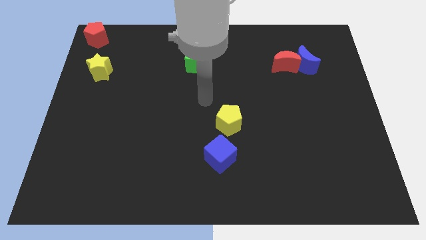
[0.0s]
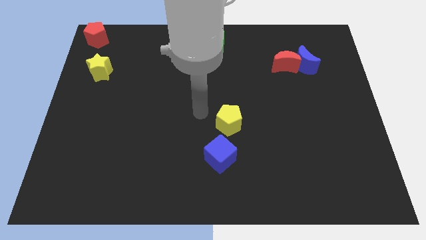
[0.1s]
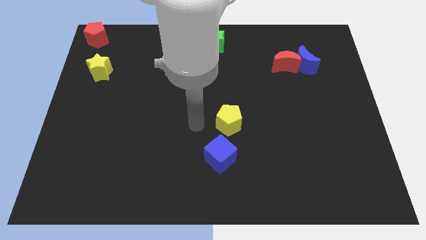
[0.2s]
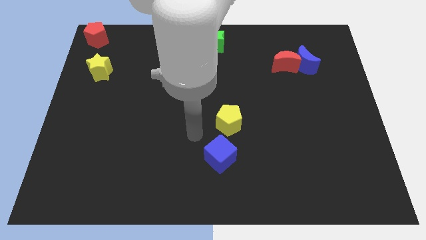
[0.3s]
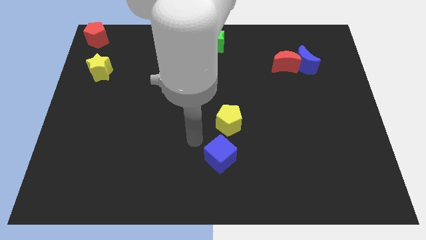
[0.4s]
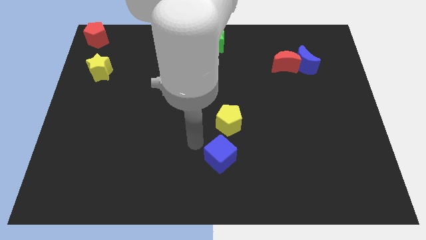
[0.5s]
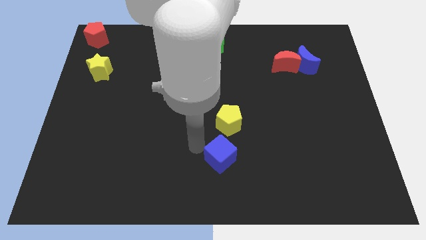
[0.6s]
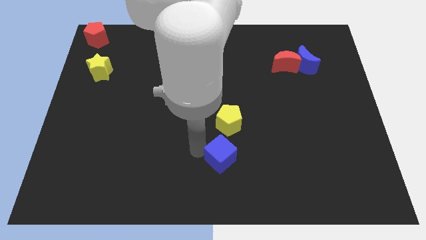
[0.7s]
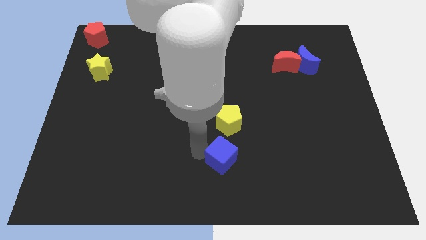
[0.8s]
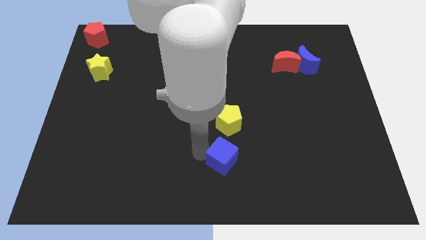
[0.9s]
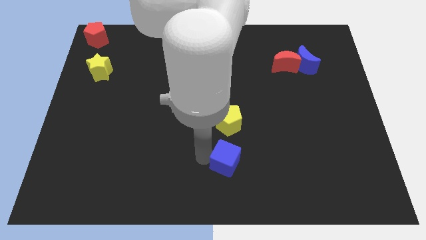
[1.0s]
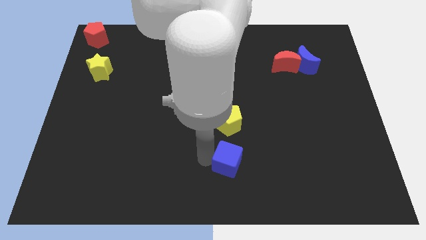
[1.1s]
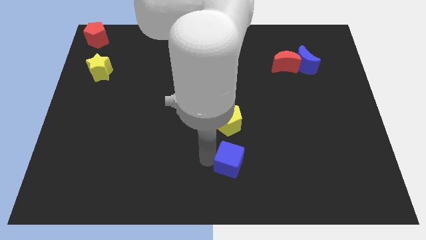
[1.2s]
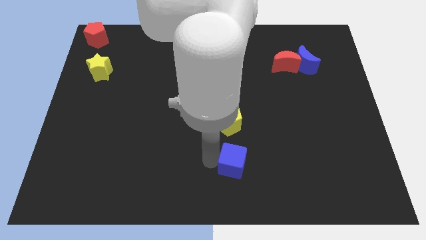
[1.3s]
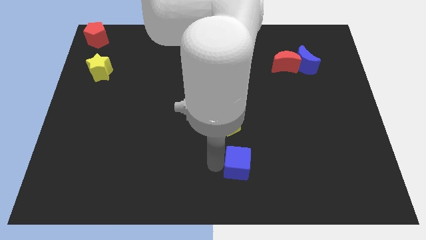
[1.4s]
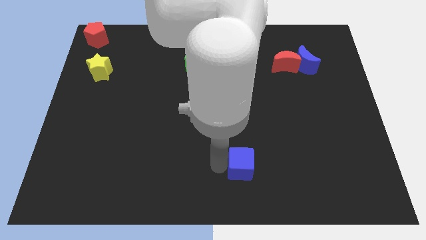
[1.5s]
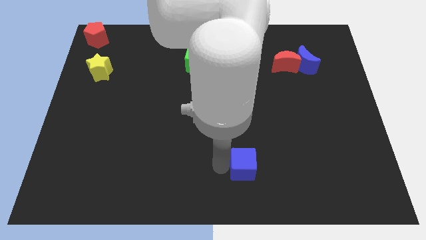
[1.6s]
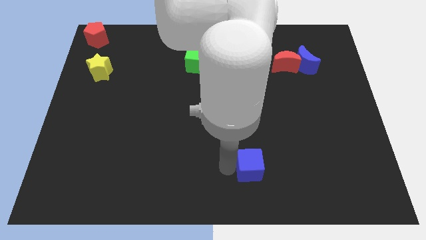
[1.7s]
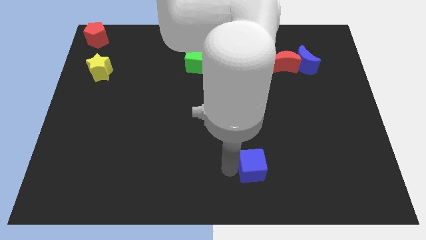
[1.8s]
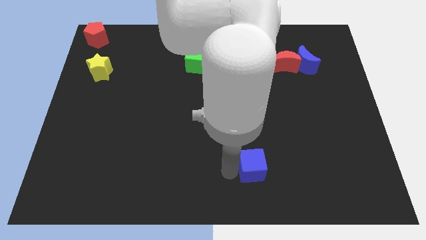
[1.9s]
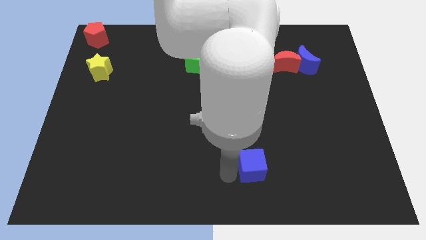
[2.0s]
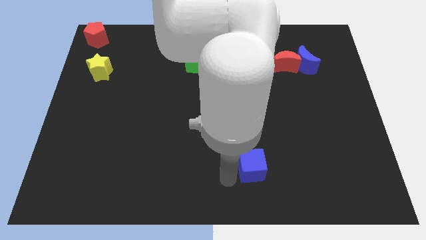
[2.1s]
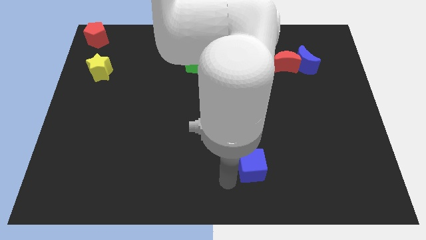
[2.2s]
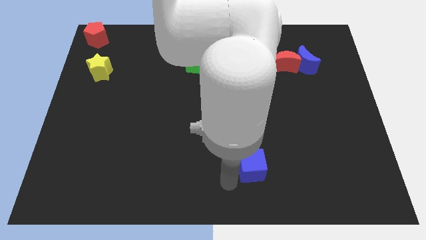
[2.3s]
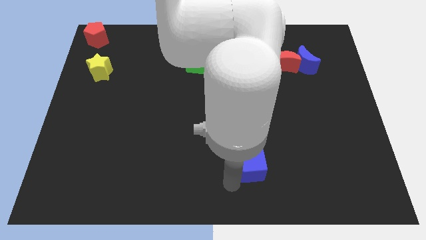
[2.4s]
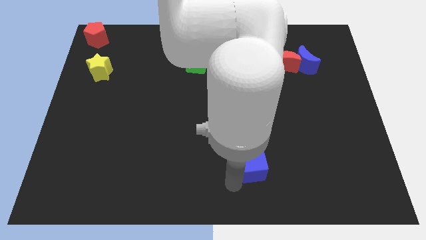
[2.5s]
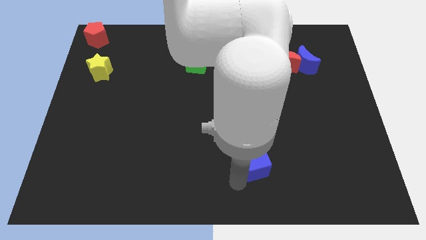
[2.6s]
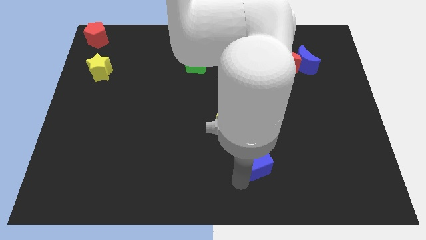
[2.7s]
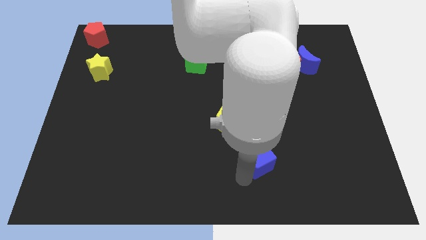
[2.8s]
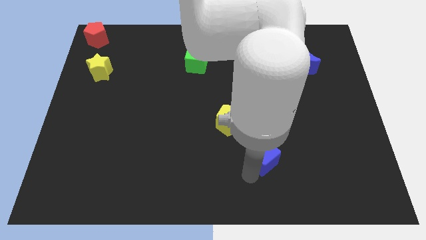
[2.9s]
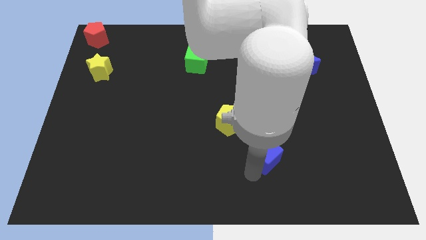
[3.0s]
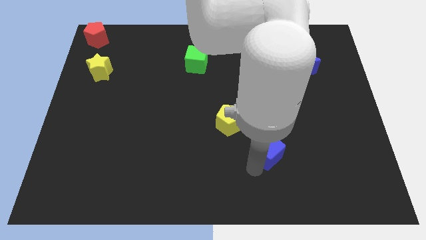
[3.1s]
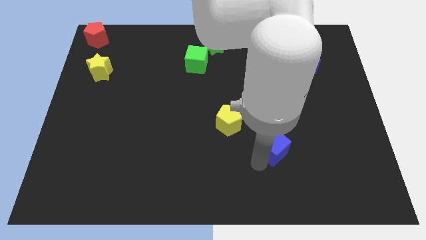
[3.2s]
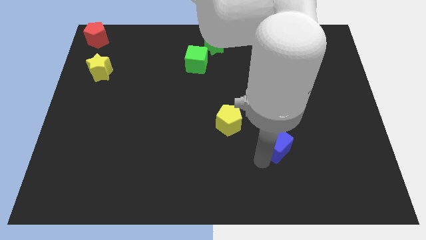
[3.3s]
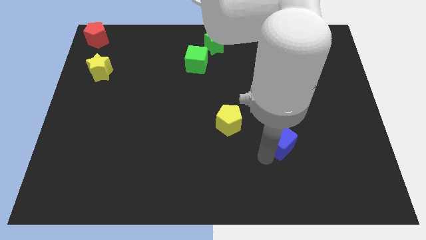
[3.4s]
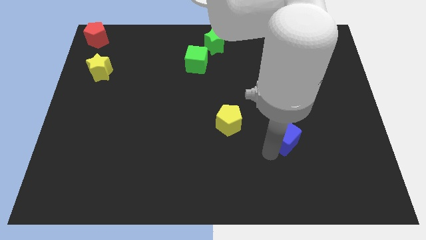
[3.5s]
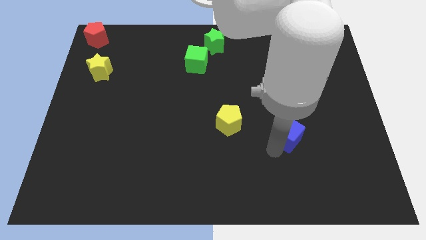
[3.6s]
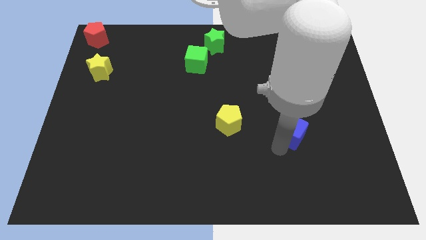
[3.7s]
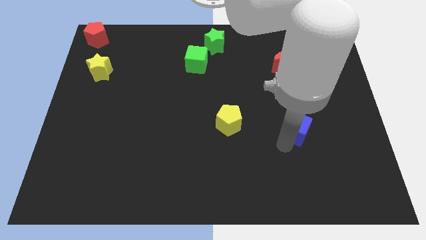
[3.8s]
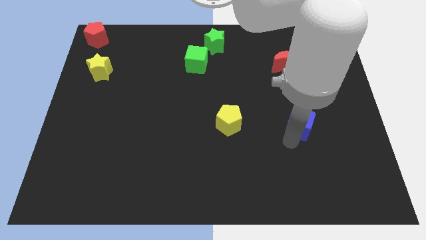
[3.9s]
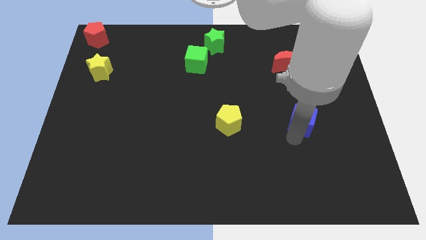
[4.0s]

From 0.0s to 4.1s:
separate the blue cube from the yellow pentagon

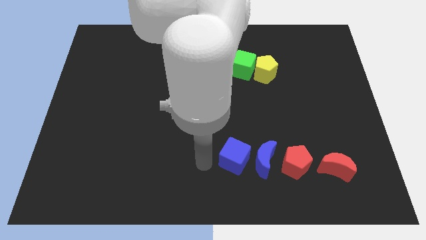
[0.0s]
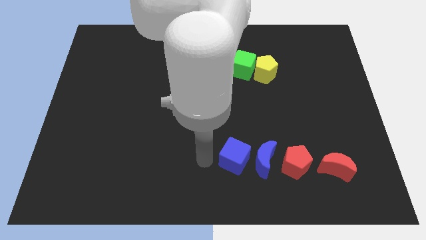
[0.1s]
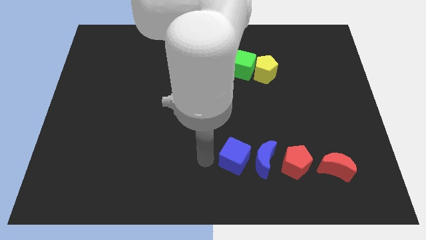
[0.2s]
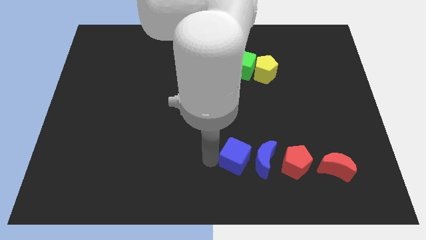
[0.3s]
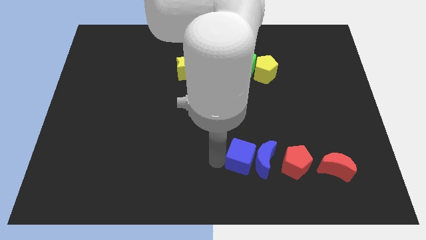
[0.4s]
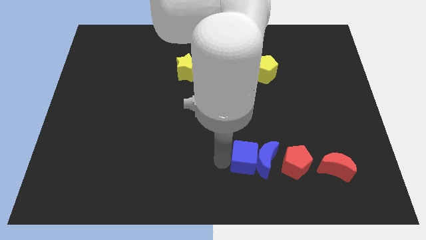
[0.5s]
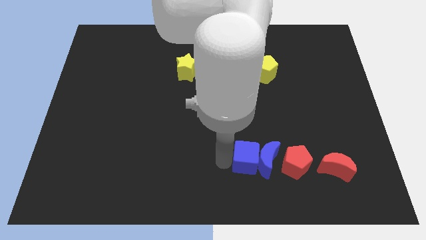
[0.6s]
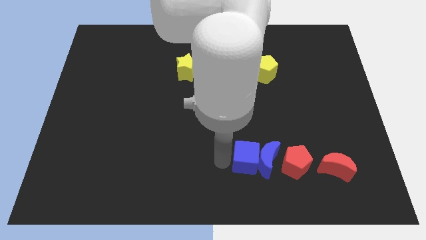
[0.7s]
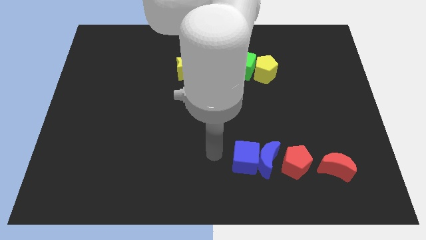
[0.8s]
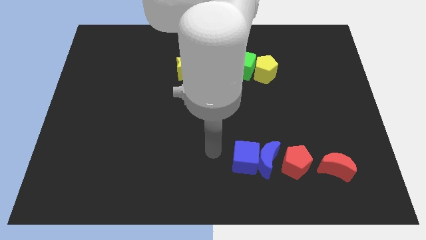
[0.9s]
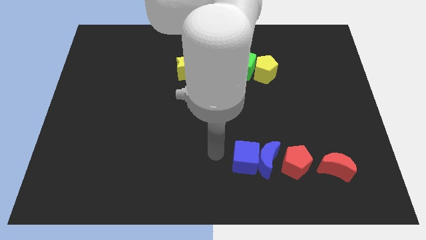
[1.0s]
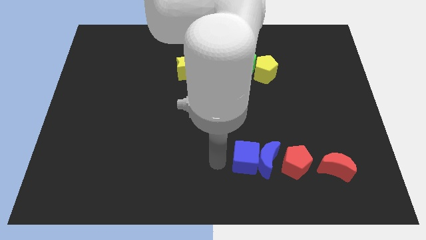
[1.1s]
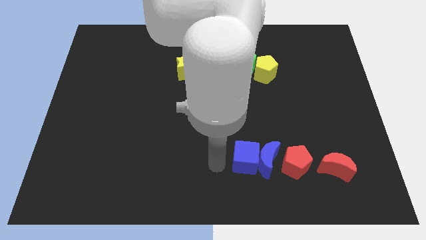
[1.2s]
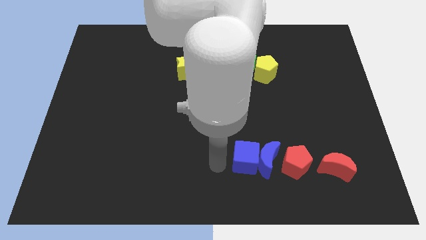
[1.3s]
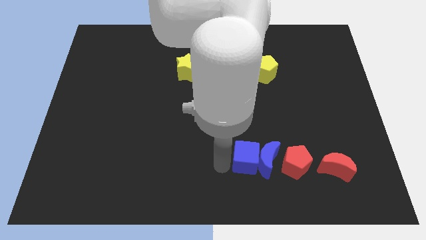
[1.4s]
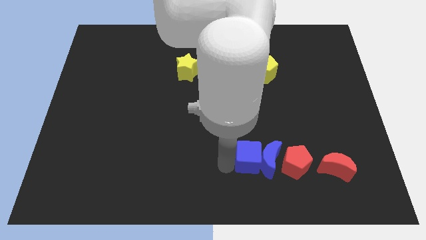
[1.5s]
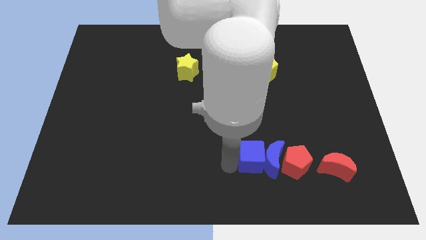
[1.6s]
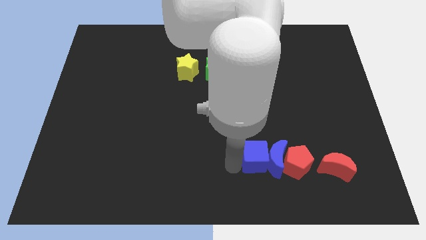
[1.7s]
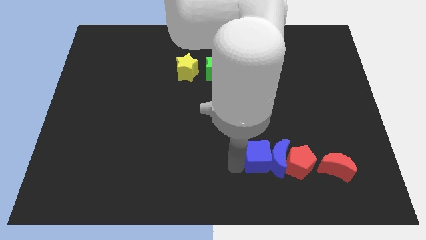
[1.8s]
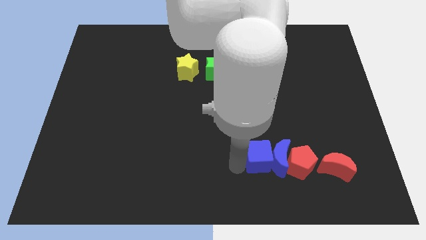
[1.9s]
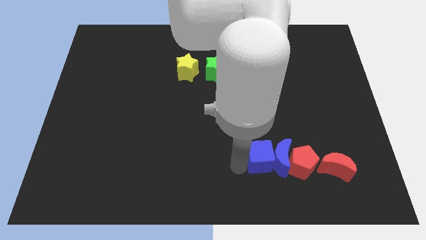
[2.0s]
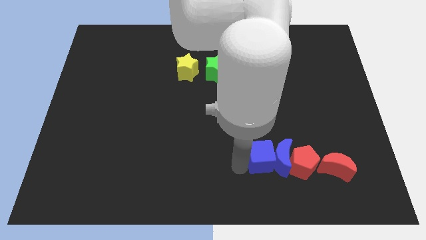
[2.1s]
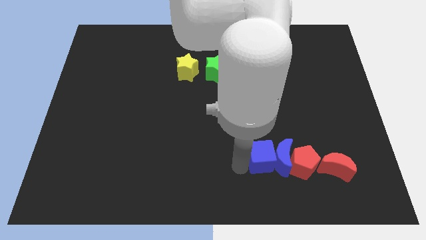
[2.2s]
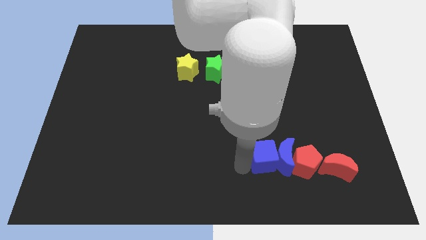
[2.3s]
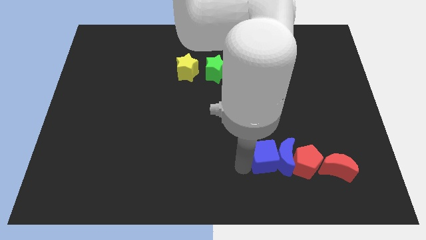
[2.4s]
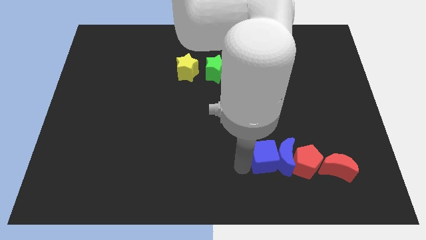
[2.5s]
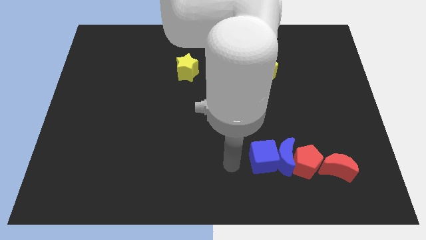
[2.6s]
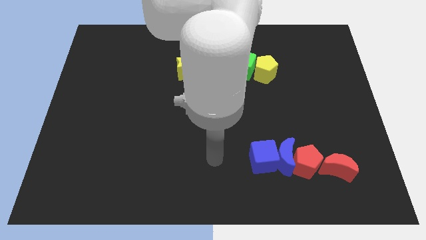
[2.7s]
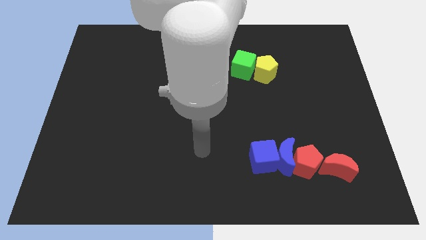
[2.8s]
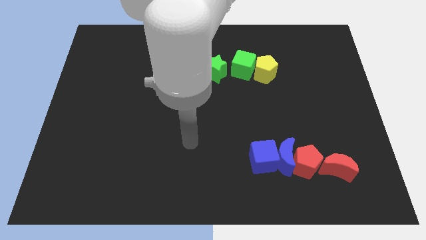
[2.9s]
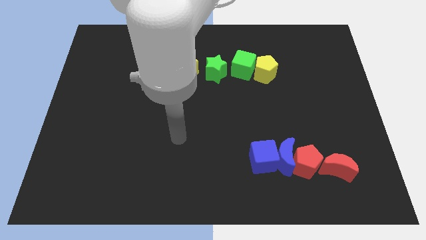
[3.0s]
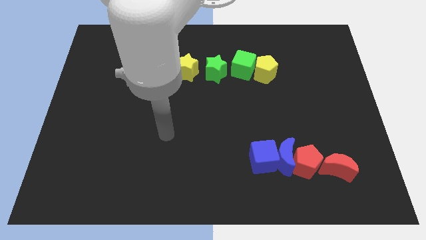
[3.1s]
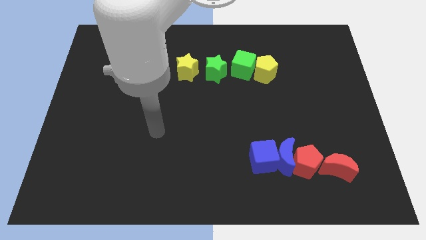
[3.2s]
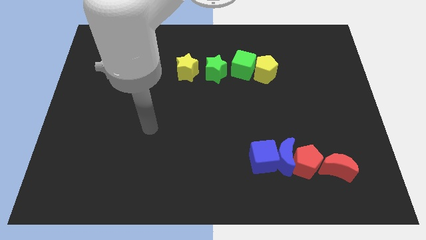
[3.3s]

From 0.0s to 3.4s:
push the red pentagon and the blue moon into the red moon with the blue cube

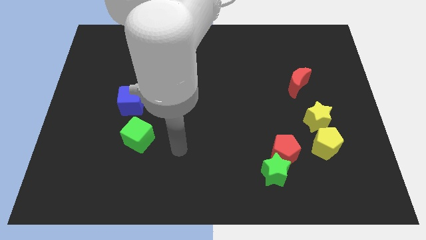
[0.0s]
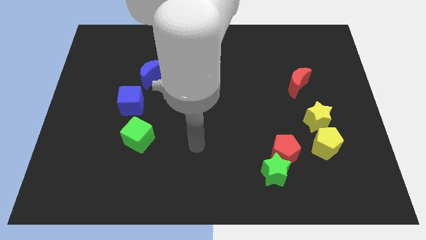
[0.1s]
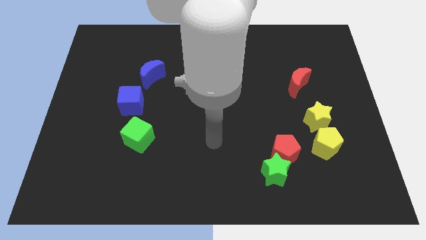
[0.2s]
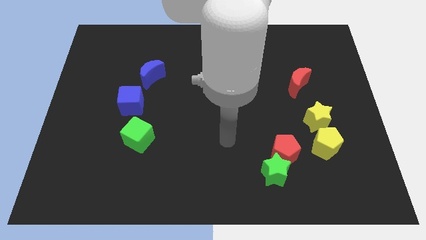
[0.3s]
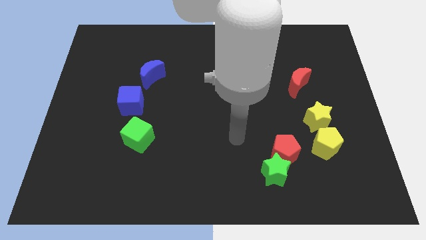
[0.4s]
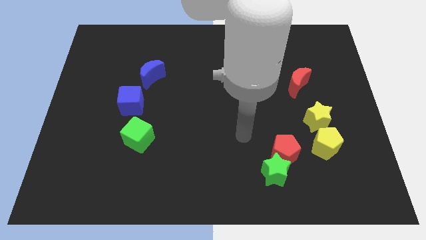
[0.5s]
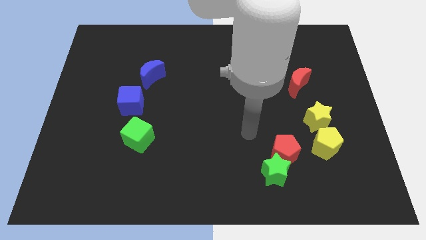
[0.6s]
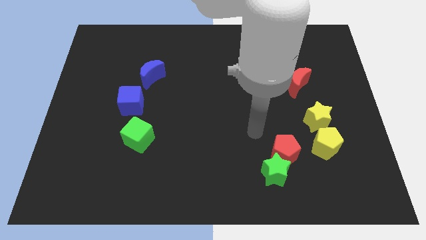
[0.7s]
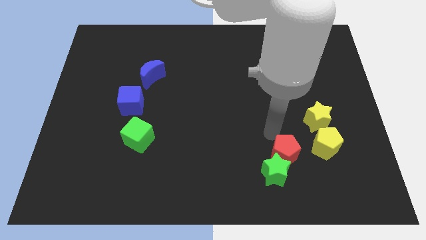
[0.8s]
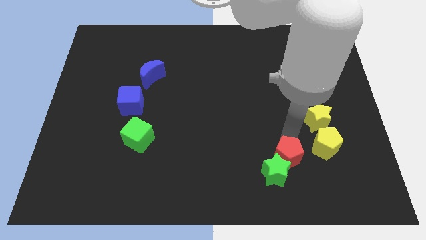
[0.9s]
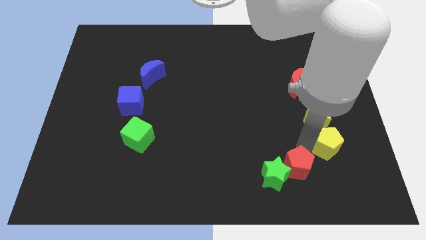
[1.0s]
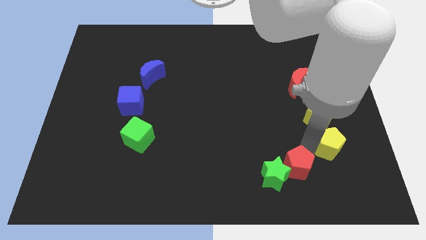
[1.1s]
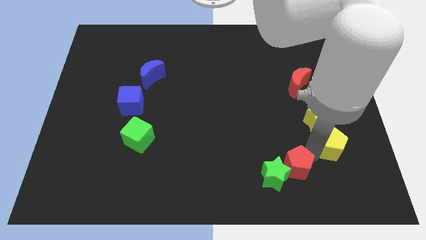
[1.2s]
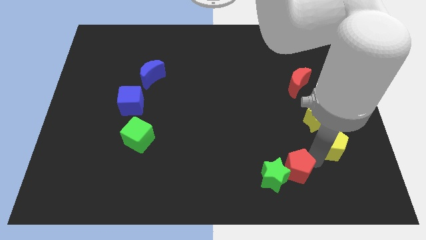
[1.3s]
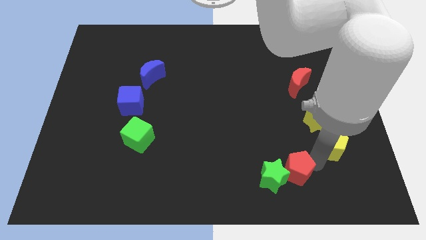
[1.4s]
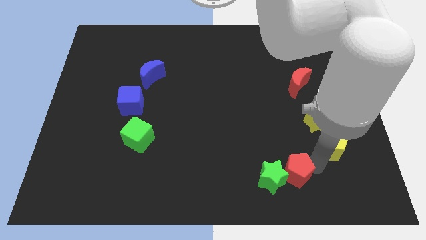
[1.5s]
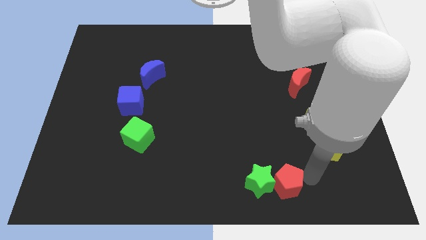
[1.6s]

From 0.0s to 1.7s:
move your arm in between the pentagons
